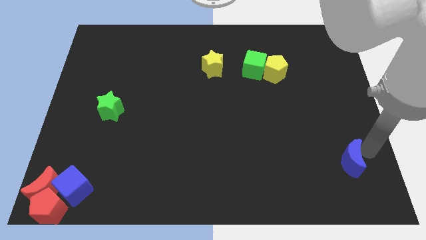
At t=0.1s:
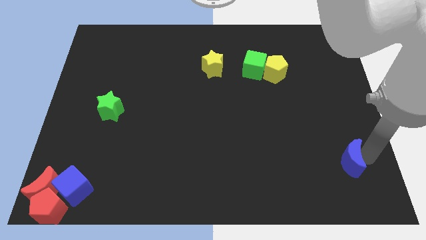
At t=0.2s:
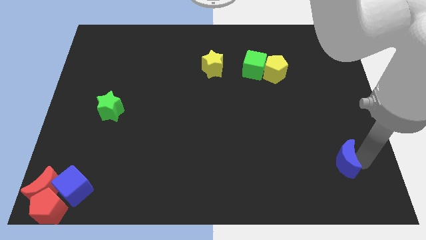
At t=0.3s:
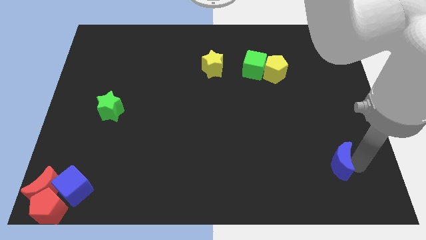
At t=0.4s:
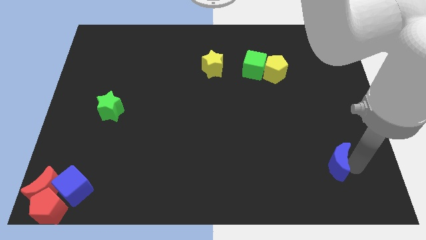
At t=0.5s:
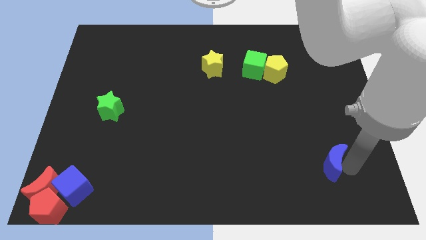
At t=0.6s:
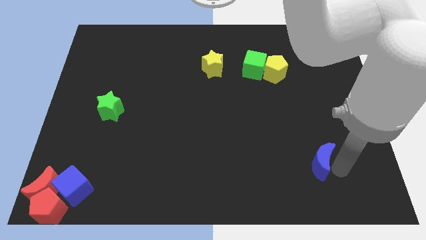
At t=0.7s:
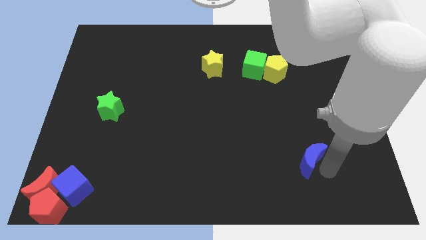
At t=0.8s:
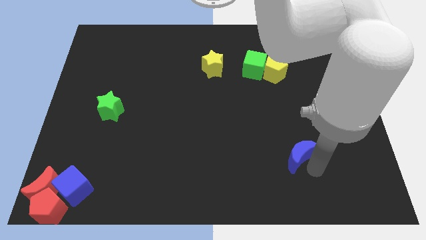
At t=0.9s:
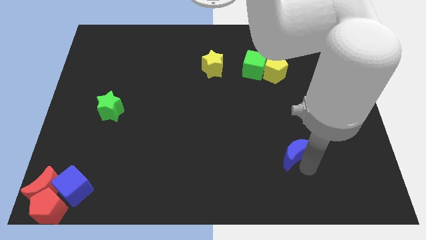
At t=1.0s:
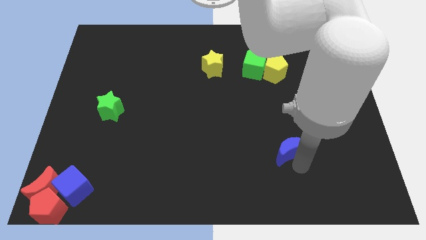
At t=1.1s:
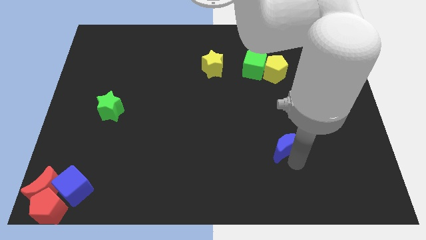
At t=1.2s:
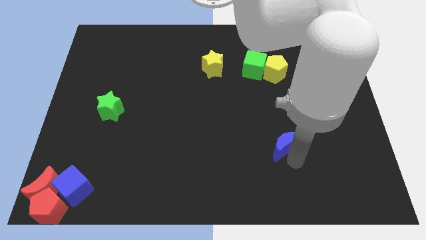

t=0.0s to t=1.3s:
push the blue crescent to the left of the board

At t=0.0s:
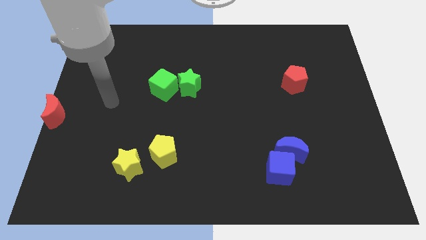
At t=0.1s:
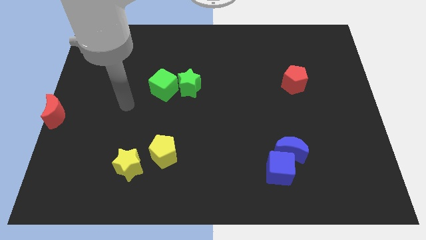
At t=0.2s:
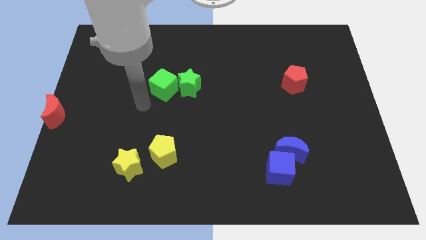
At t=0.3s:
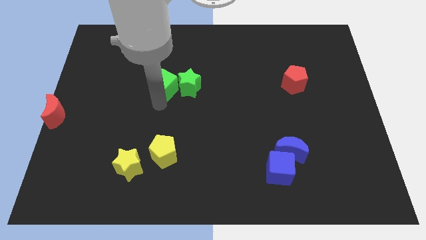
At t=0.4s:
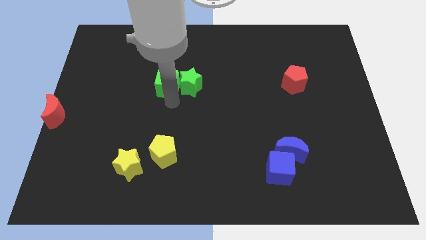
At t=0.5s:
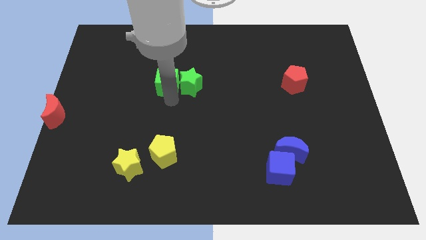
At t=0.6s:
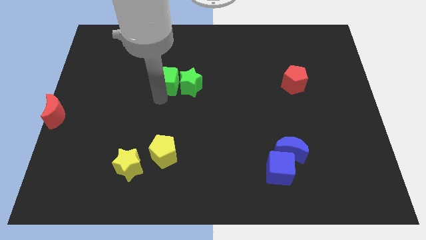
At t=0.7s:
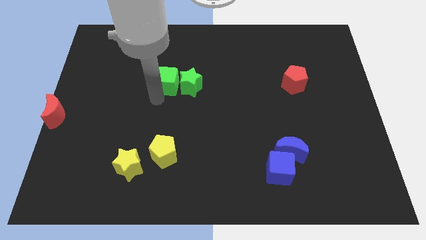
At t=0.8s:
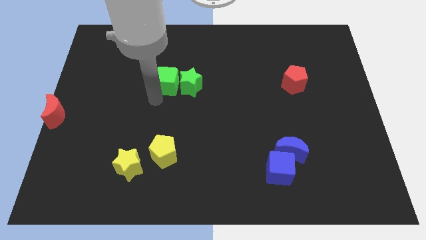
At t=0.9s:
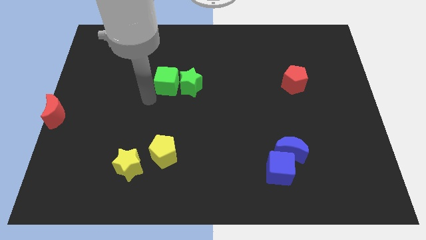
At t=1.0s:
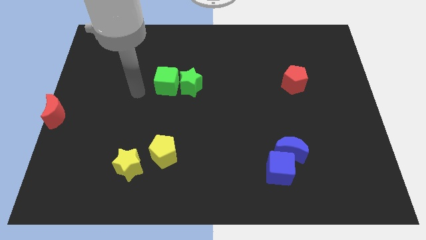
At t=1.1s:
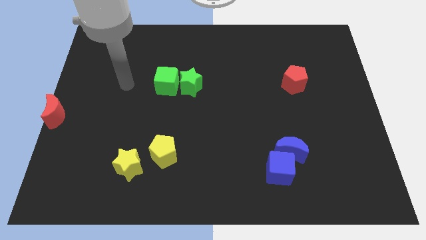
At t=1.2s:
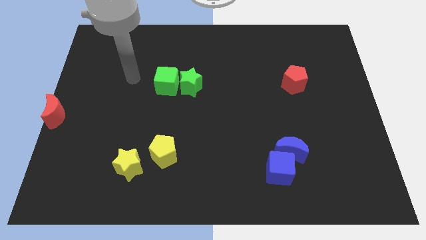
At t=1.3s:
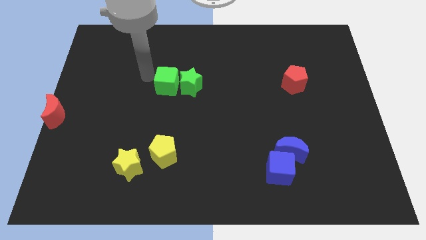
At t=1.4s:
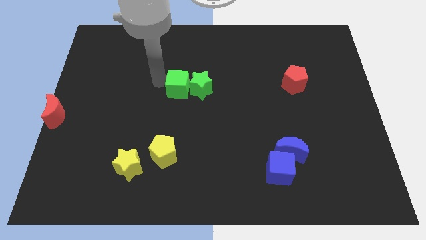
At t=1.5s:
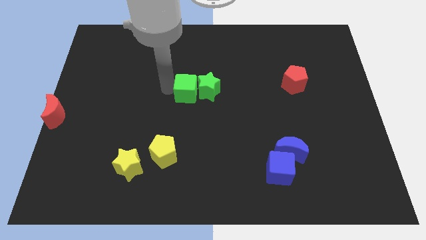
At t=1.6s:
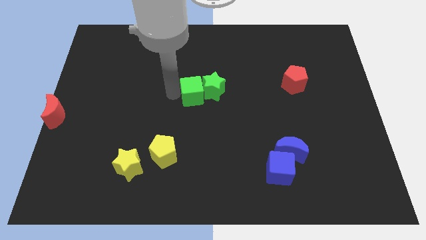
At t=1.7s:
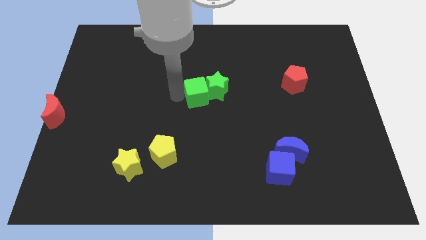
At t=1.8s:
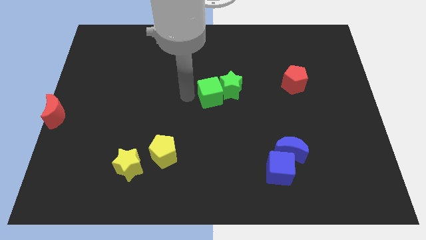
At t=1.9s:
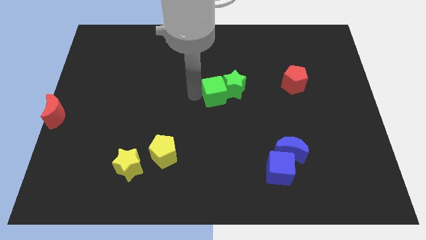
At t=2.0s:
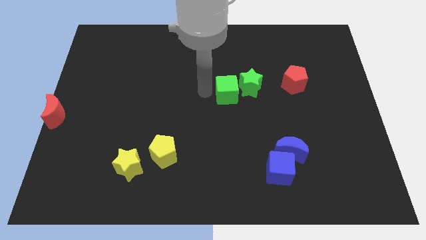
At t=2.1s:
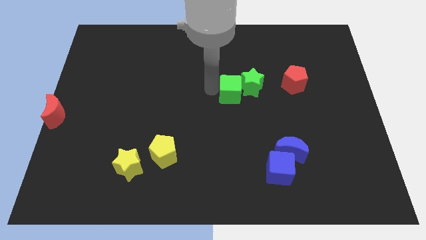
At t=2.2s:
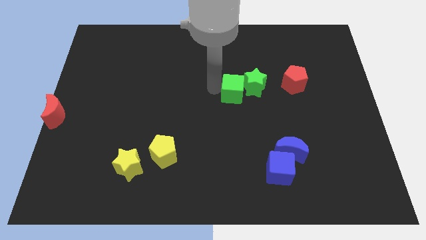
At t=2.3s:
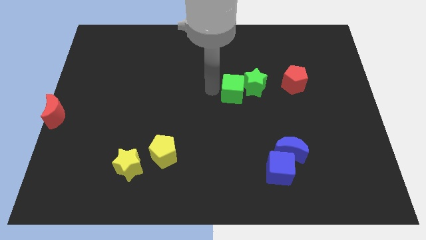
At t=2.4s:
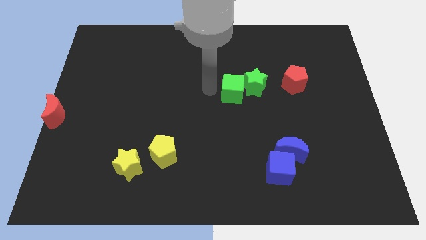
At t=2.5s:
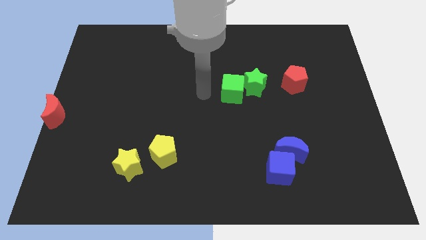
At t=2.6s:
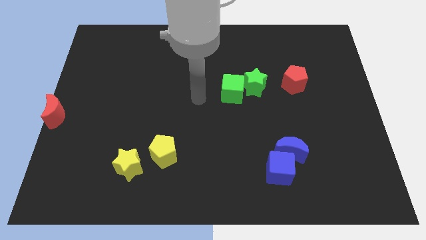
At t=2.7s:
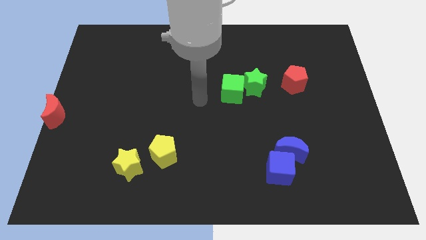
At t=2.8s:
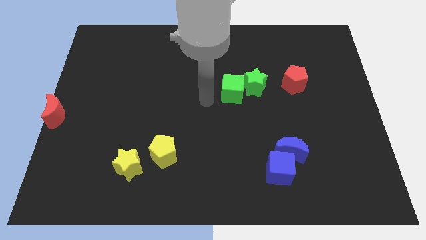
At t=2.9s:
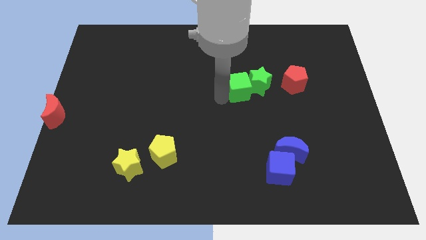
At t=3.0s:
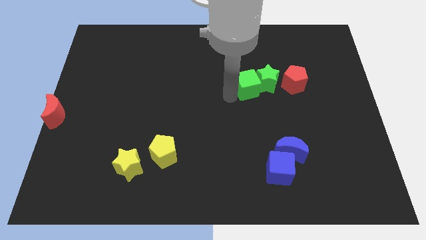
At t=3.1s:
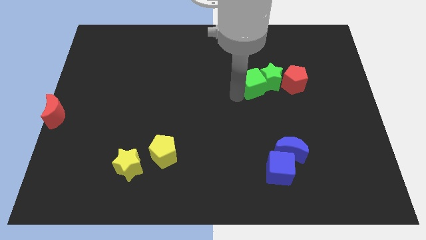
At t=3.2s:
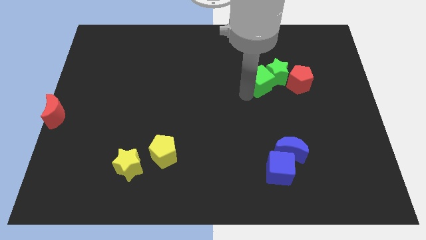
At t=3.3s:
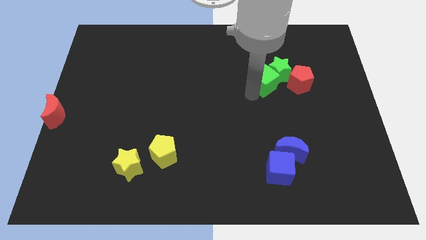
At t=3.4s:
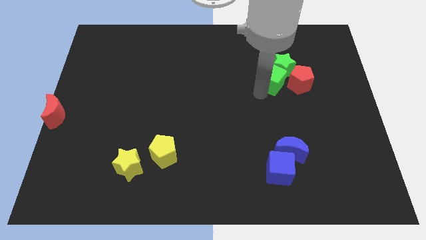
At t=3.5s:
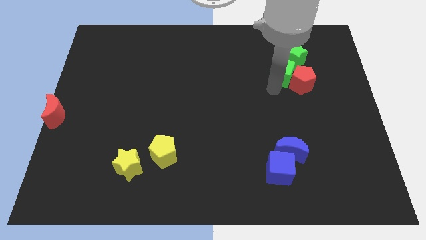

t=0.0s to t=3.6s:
push the green blocks into the red pentagon

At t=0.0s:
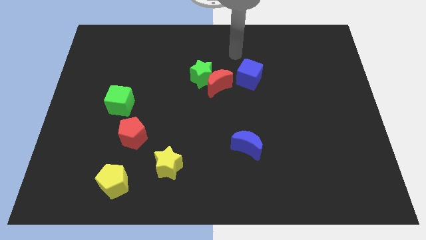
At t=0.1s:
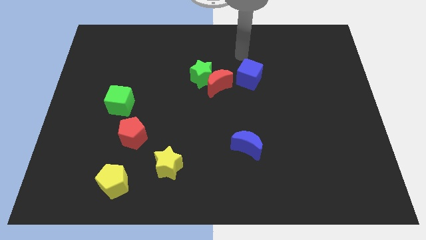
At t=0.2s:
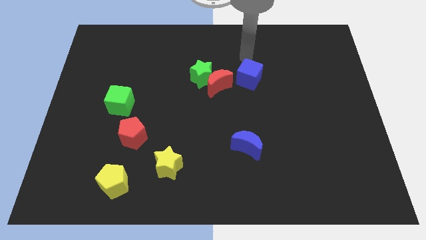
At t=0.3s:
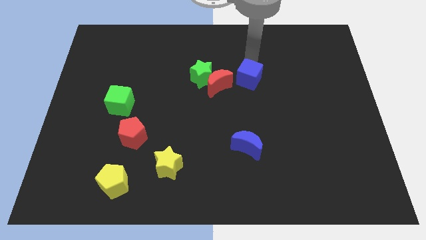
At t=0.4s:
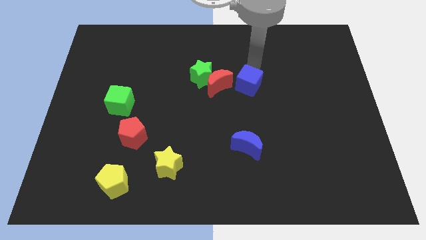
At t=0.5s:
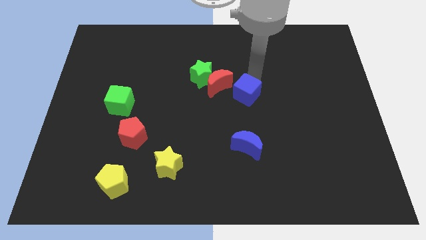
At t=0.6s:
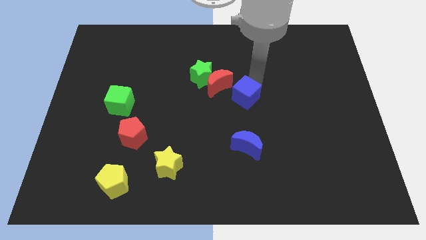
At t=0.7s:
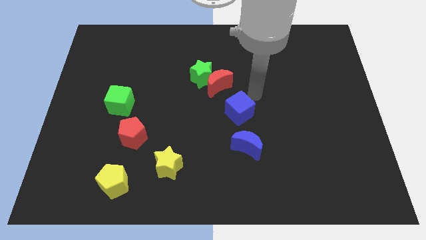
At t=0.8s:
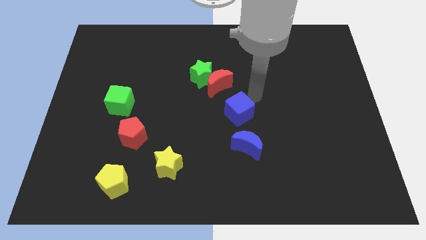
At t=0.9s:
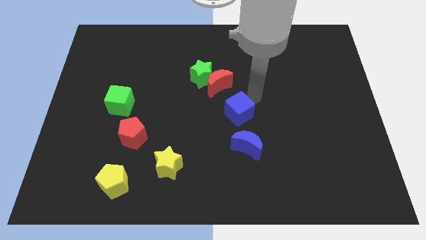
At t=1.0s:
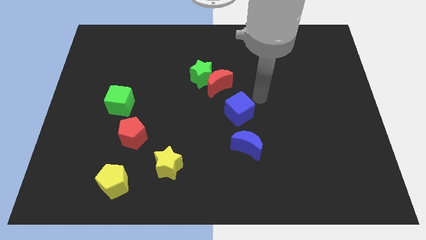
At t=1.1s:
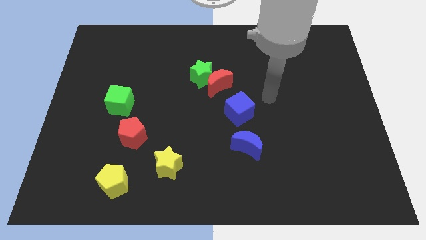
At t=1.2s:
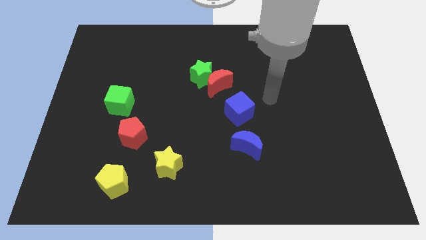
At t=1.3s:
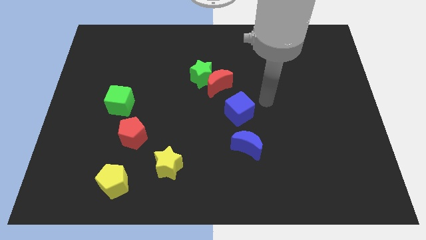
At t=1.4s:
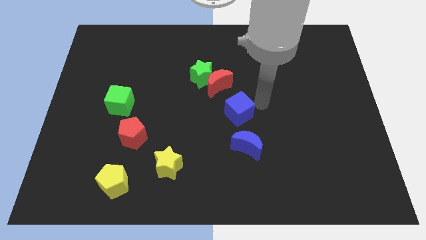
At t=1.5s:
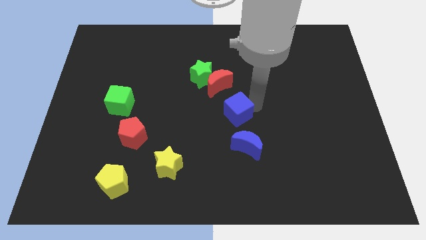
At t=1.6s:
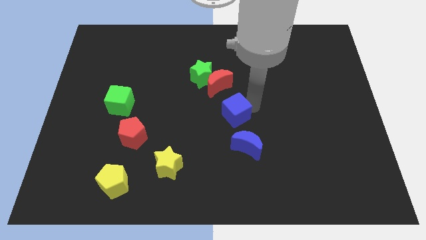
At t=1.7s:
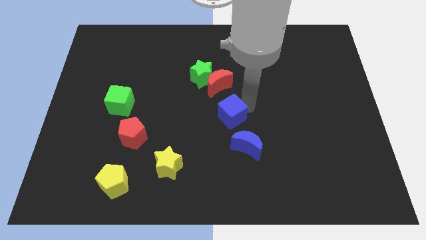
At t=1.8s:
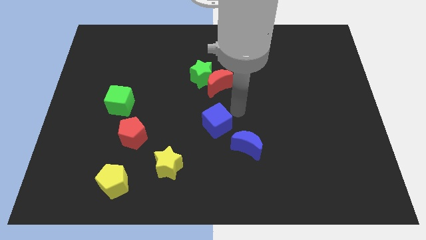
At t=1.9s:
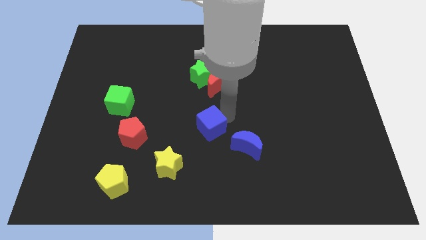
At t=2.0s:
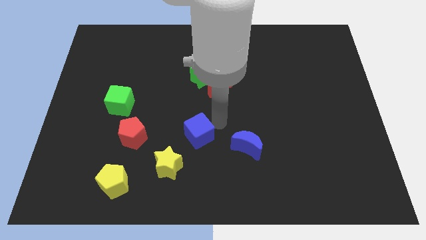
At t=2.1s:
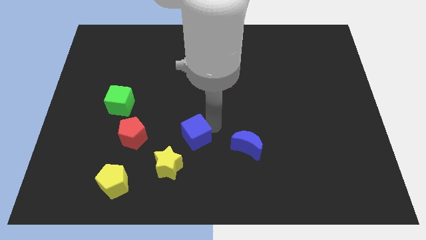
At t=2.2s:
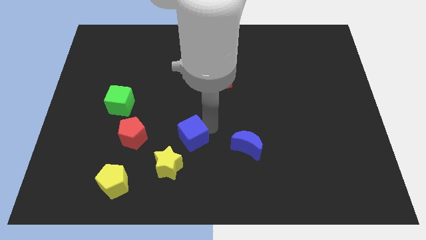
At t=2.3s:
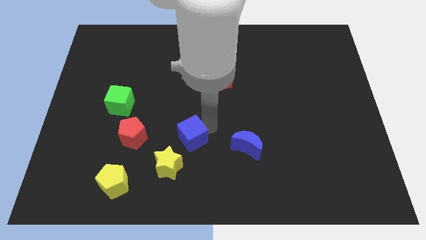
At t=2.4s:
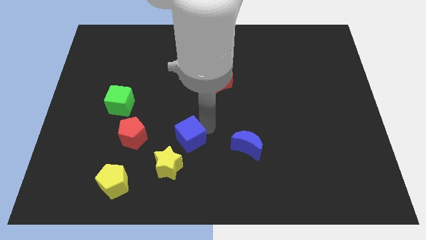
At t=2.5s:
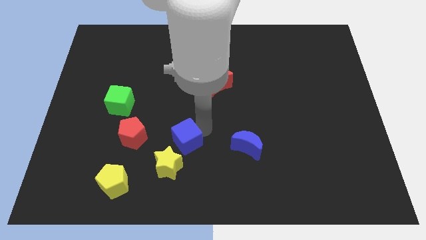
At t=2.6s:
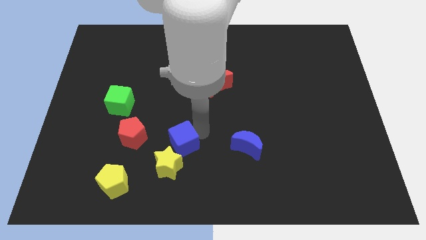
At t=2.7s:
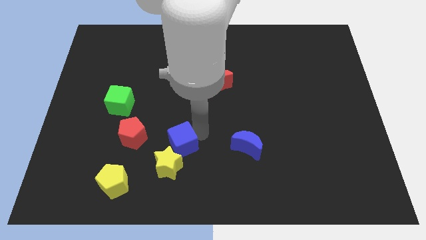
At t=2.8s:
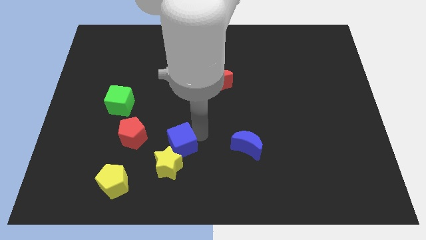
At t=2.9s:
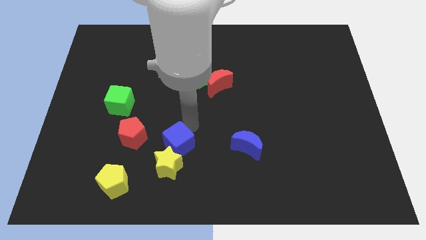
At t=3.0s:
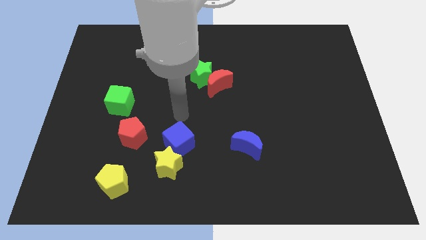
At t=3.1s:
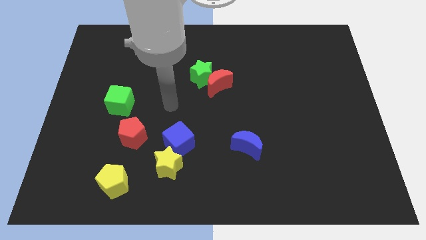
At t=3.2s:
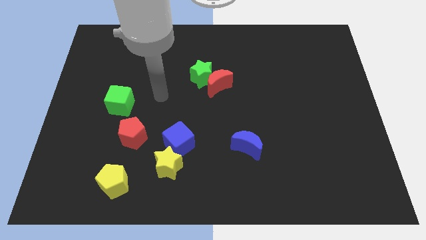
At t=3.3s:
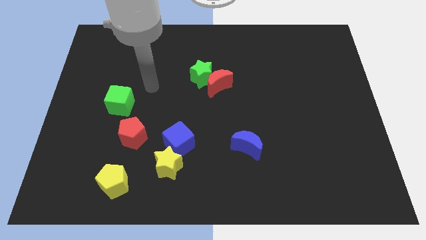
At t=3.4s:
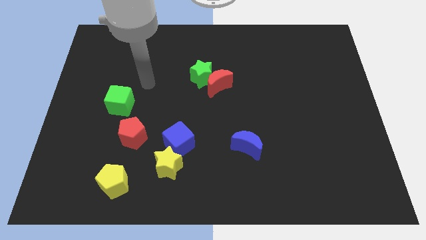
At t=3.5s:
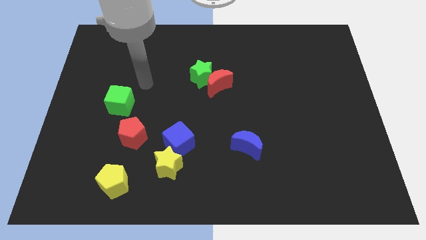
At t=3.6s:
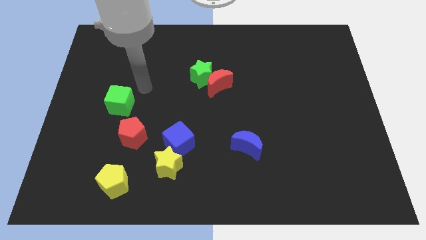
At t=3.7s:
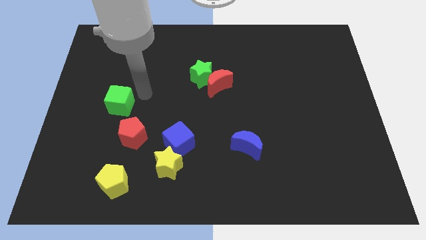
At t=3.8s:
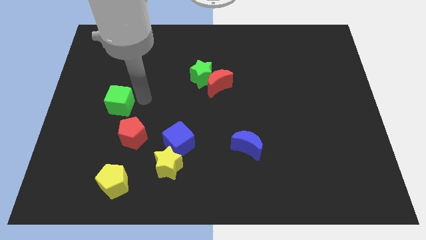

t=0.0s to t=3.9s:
put the blue cube to the right of the red pentagon
